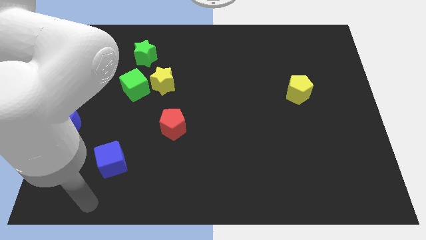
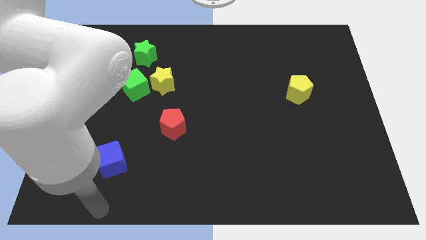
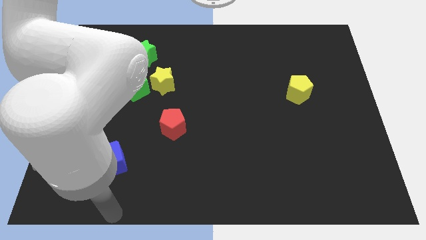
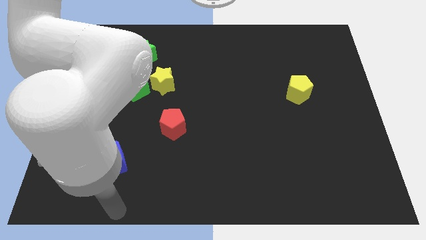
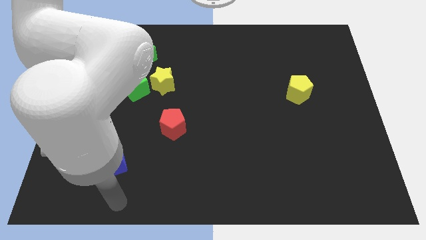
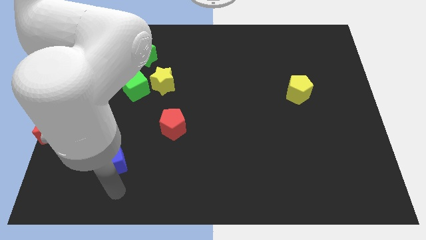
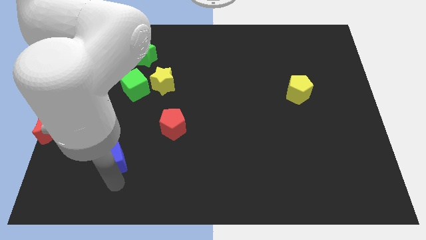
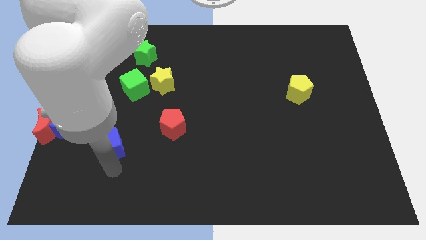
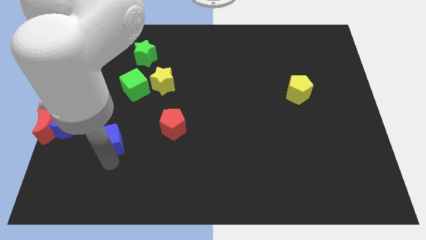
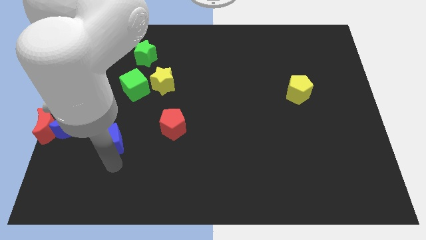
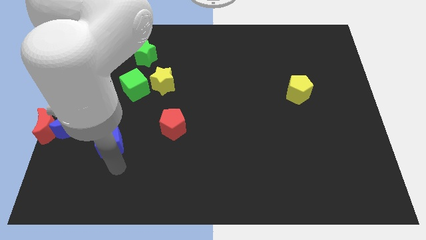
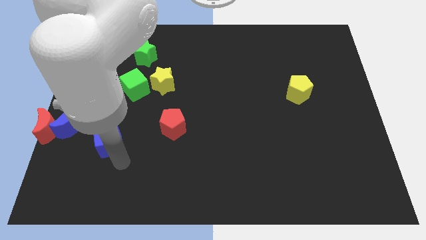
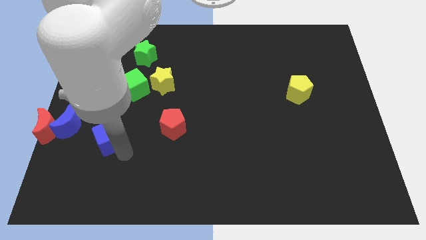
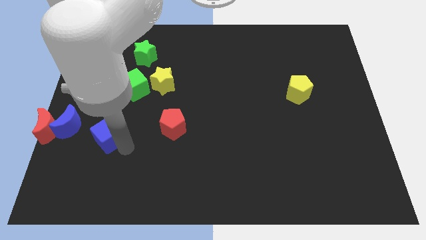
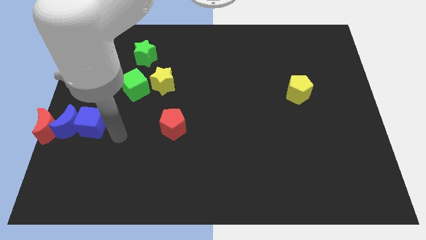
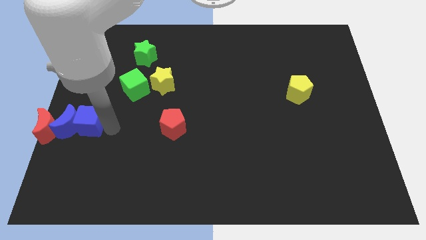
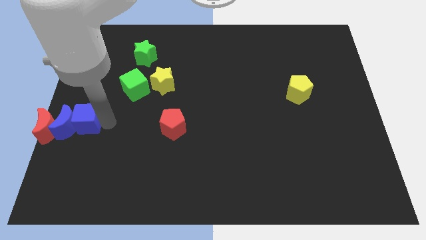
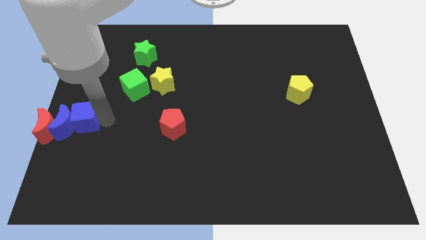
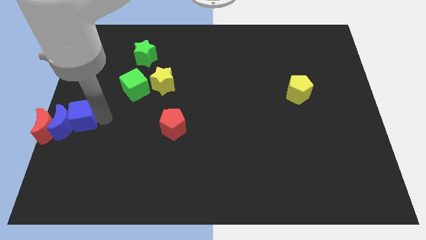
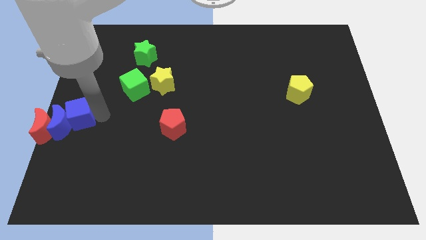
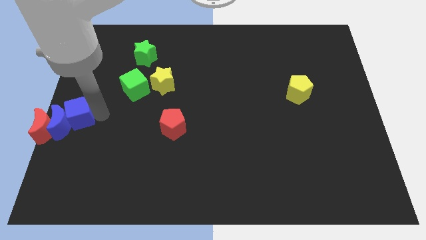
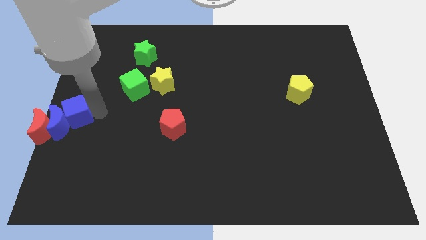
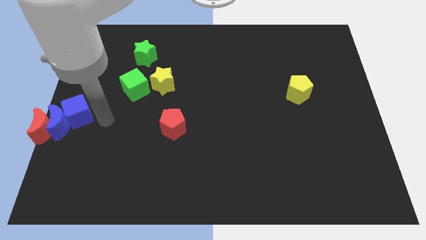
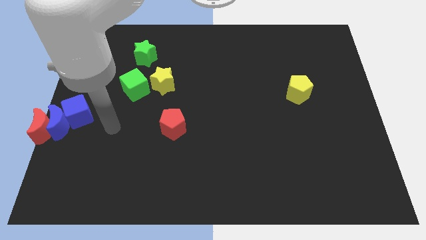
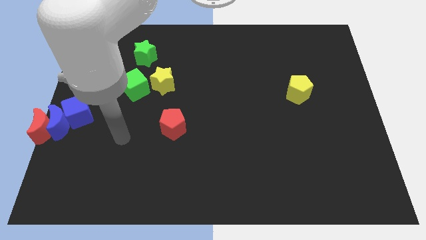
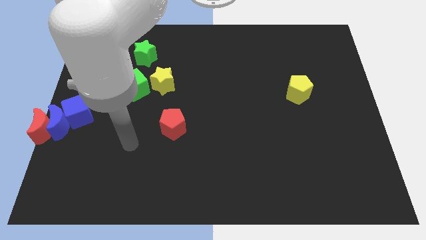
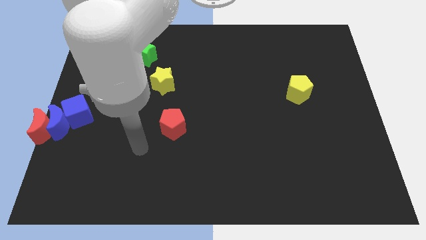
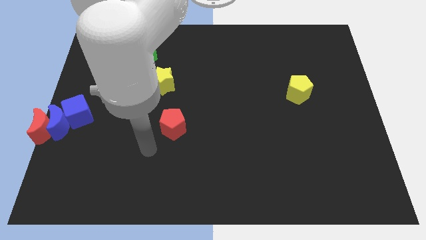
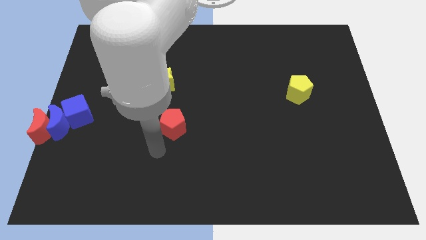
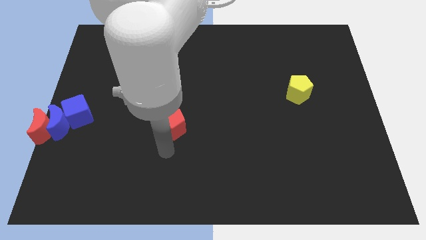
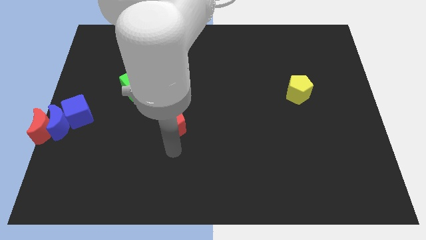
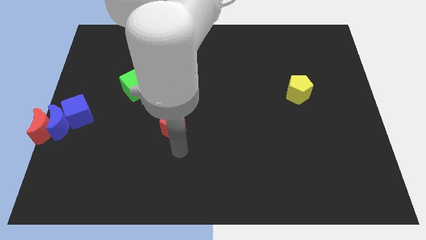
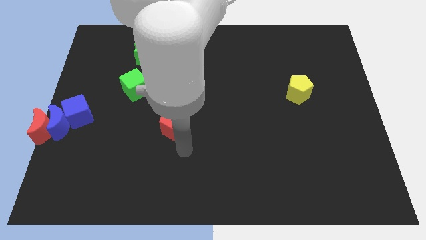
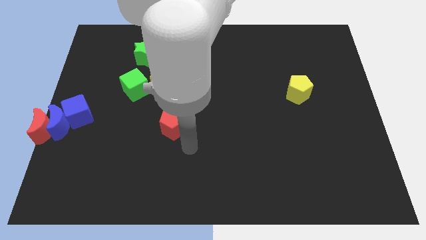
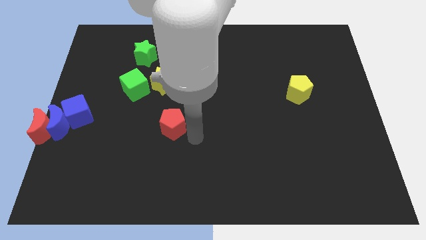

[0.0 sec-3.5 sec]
push blue cube to left center of the board

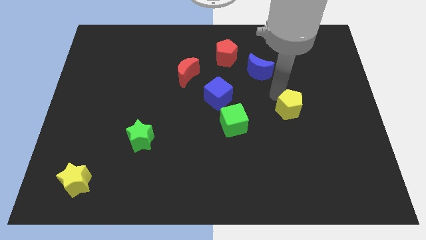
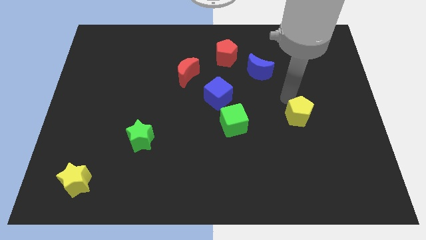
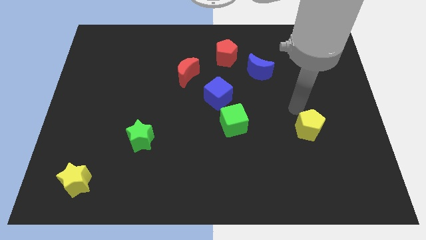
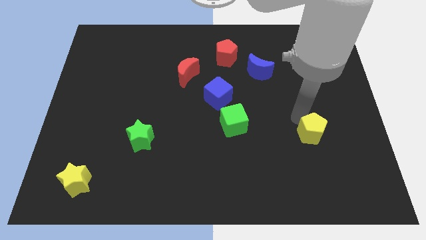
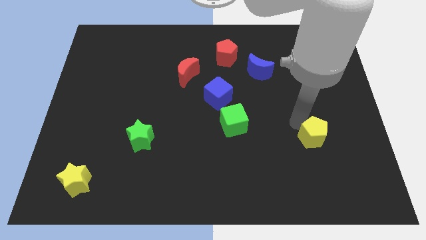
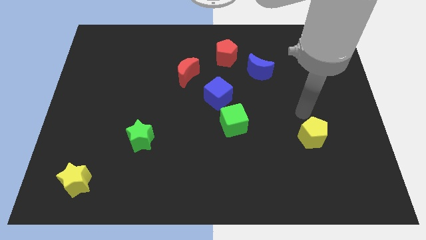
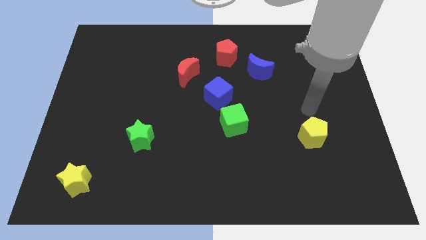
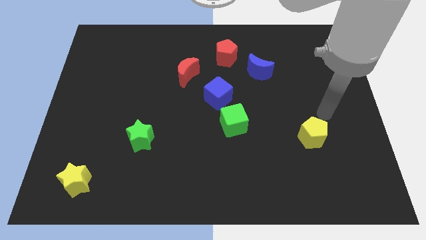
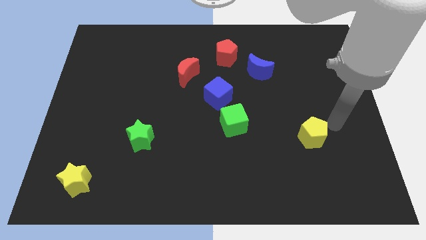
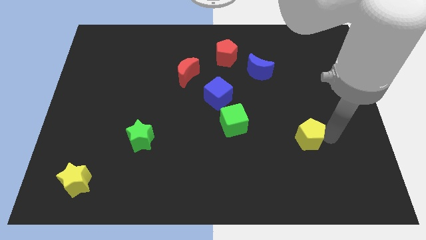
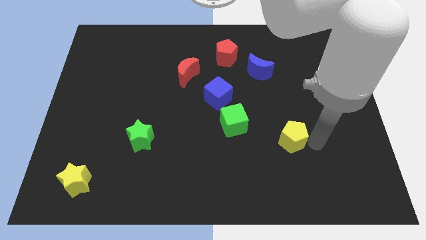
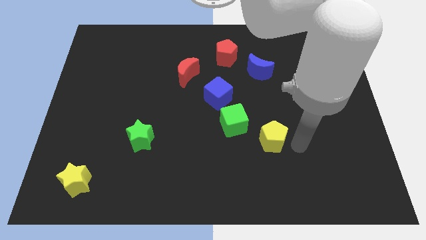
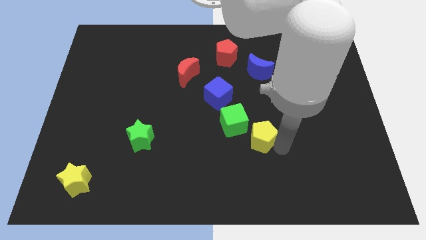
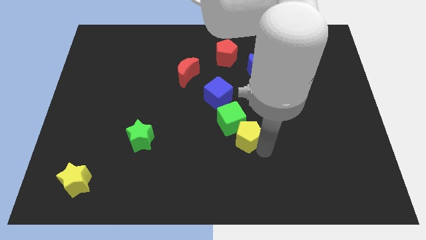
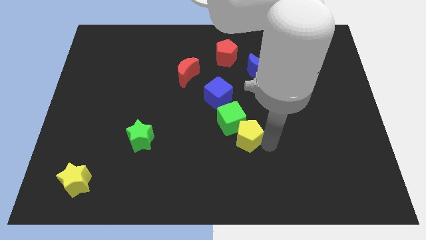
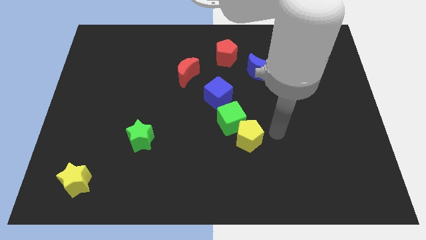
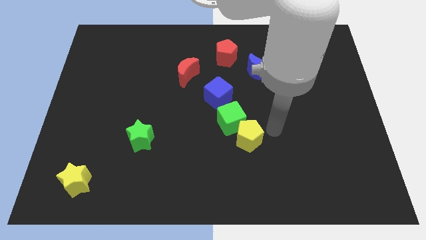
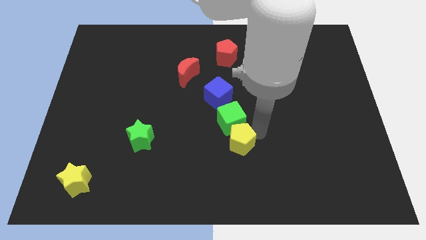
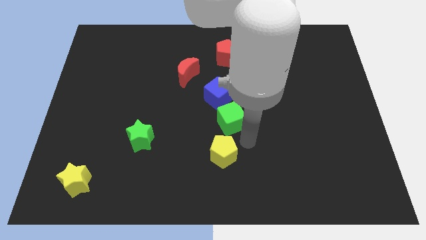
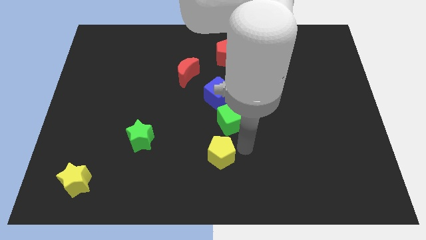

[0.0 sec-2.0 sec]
push the yellow pentagon below to the green cube

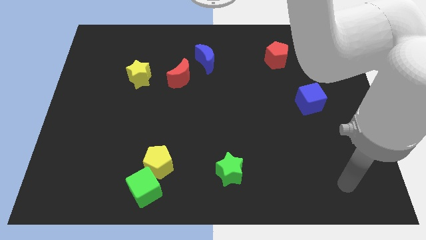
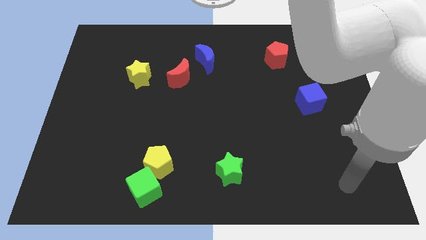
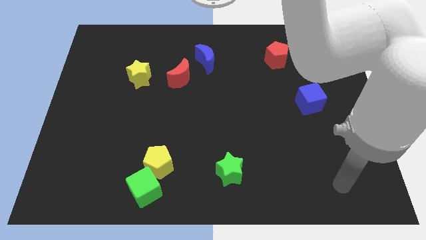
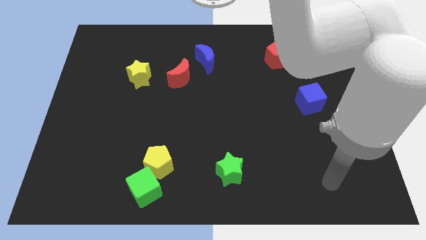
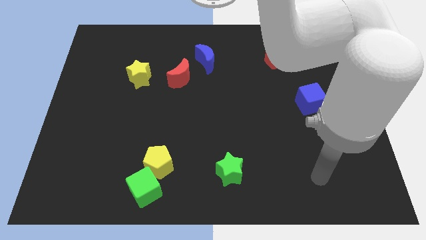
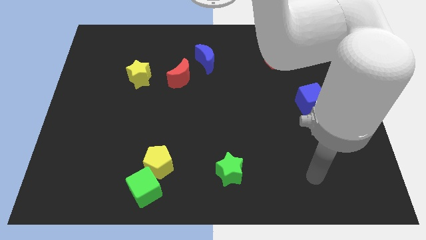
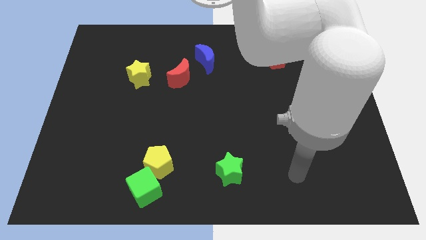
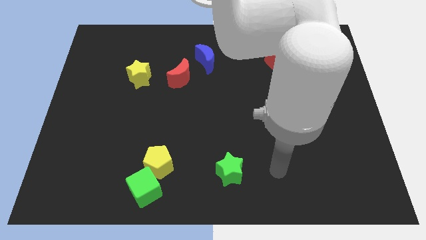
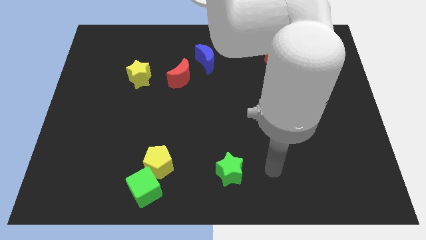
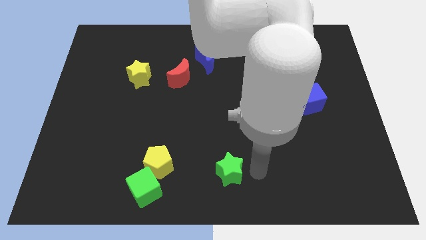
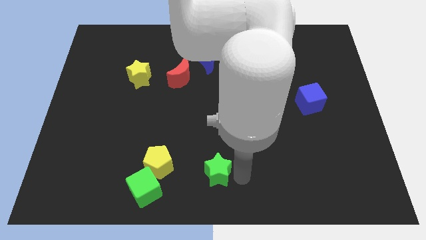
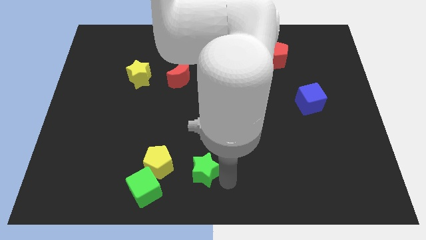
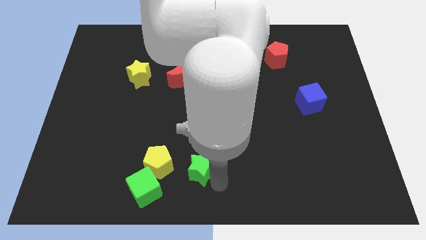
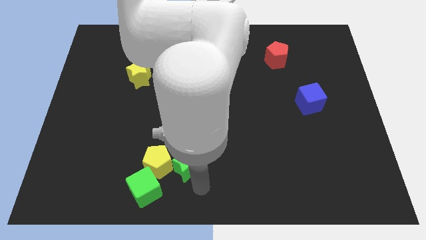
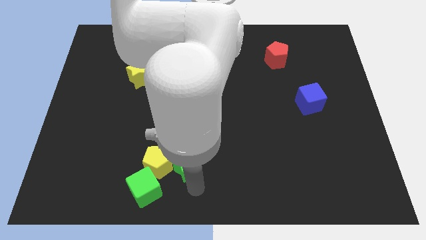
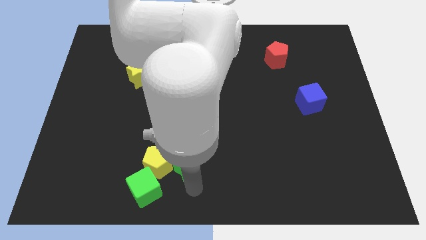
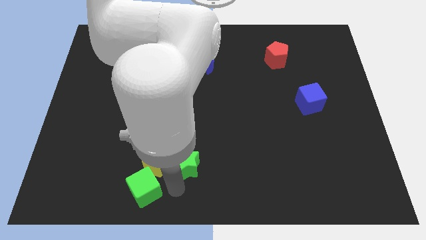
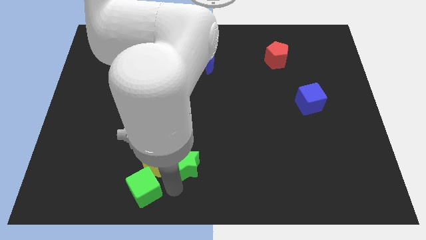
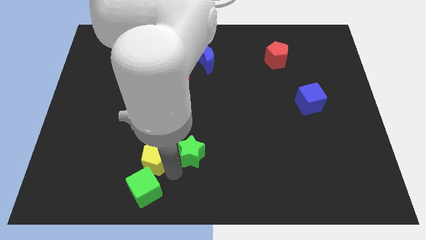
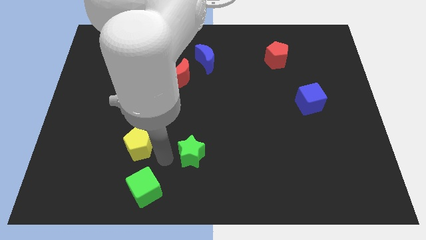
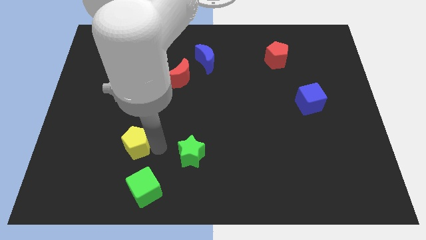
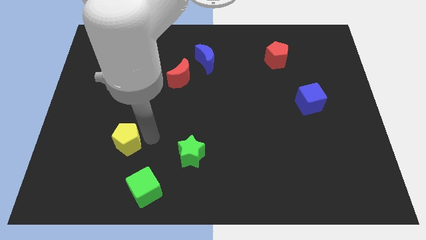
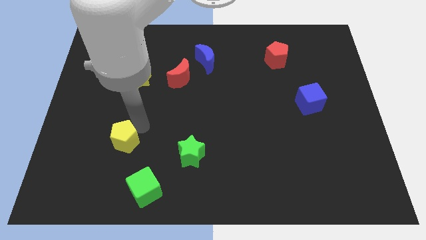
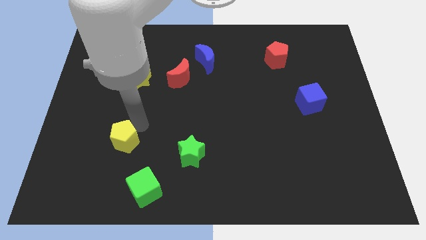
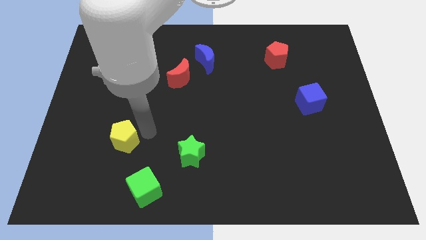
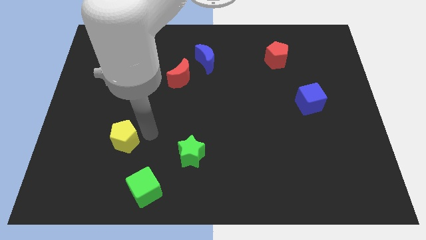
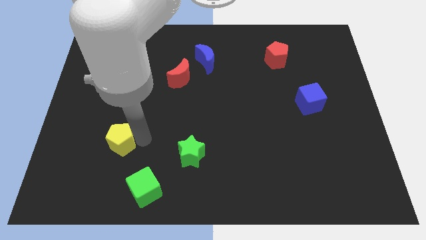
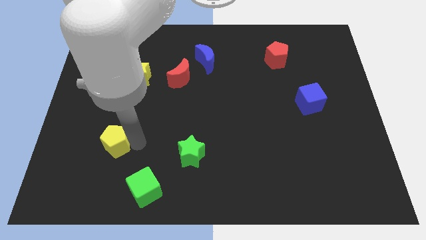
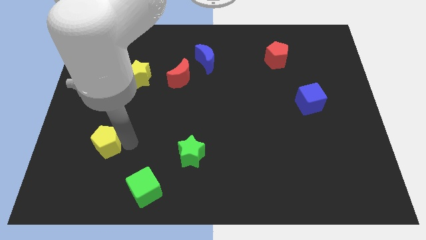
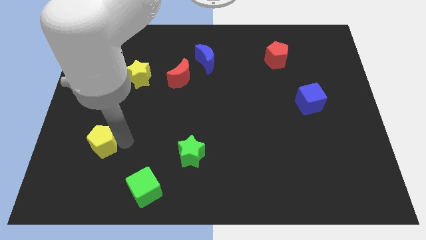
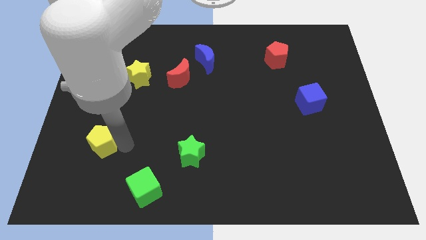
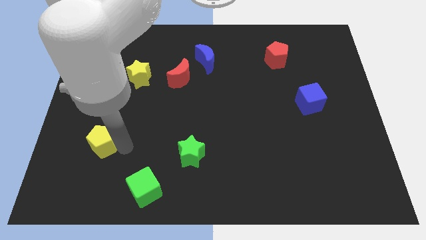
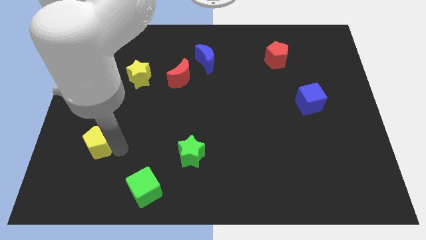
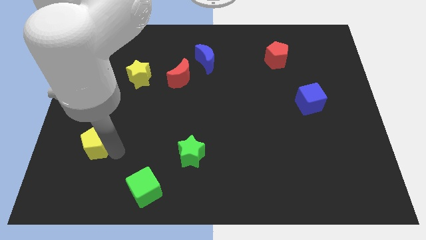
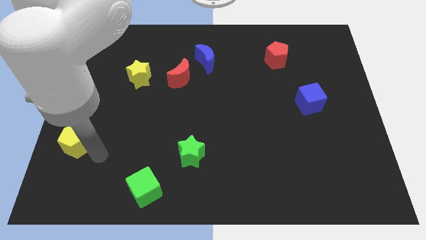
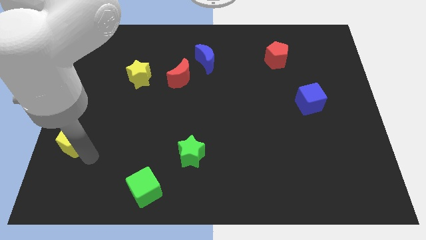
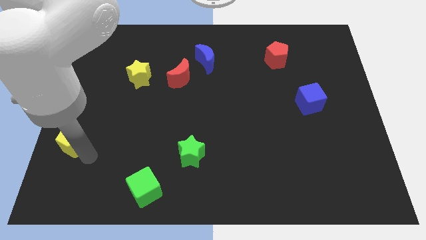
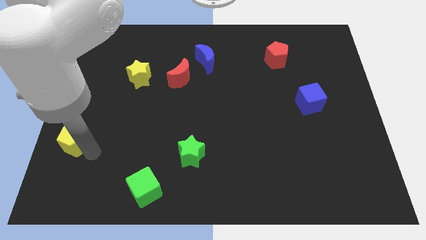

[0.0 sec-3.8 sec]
push the yellow pentagon away from the green cube
